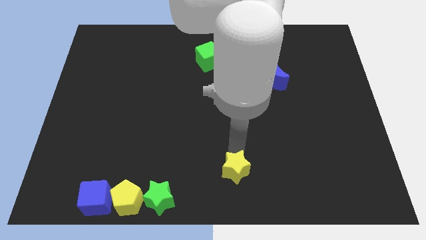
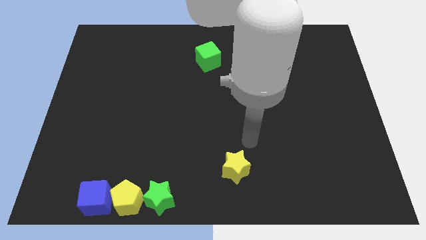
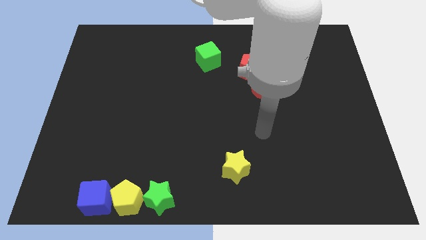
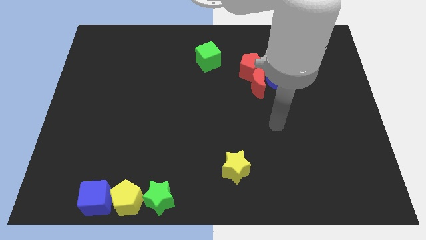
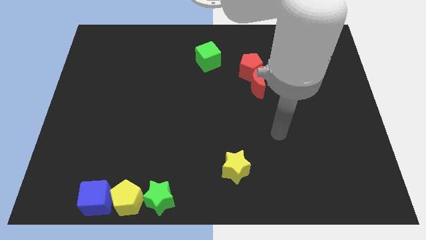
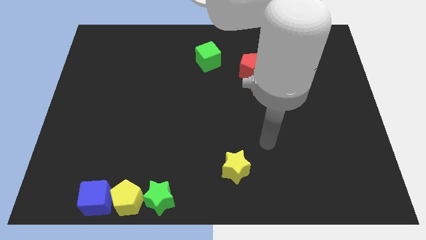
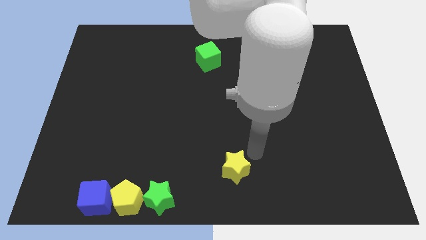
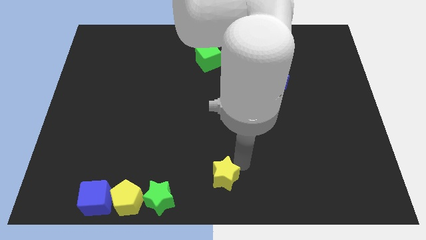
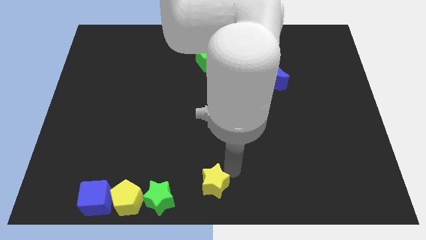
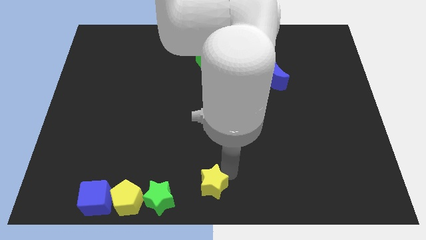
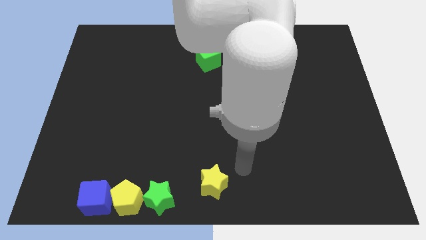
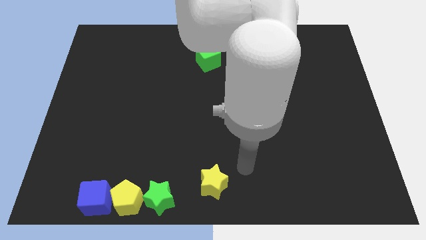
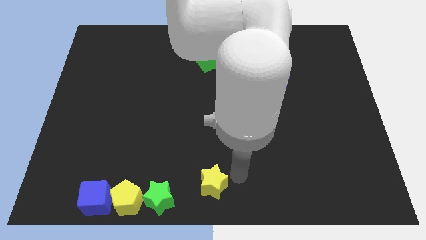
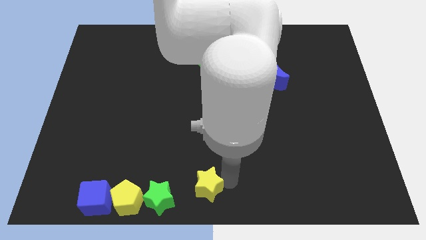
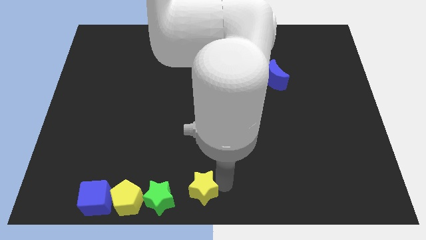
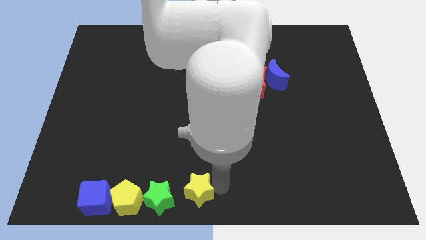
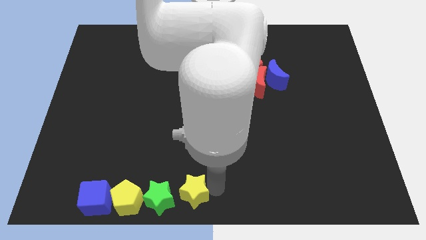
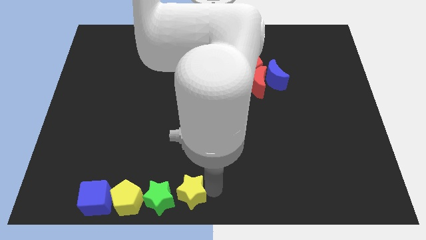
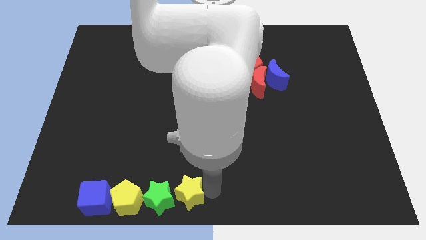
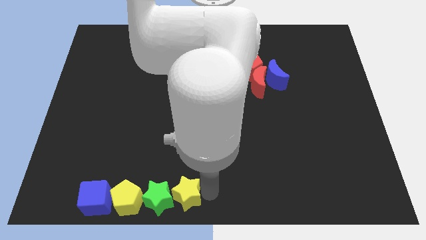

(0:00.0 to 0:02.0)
push the yellow star to the right of the green star

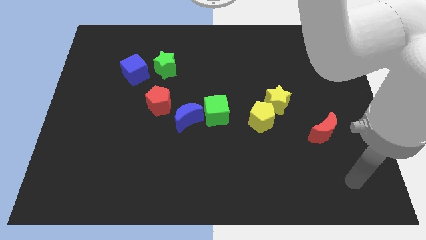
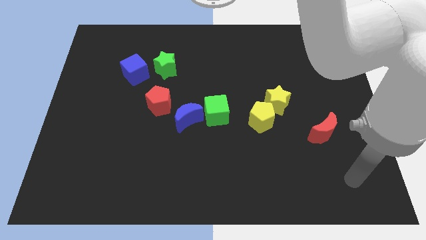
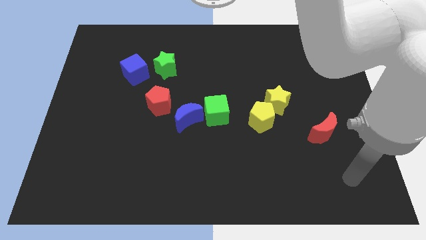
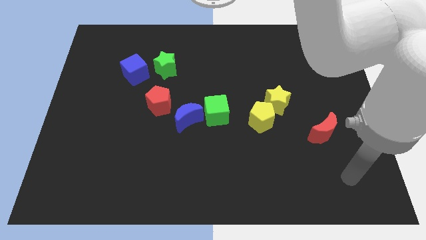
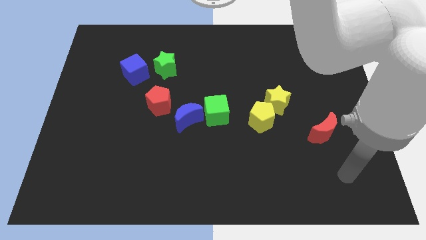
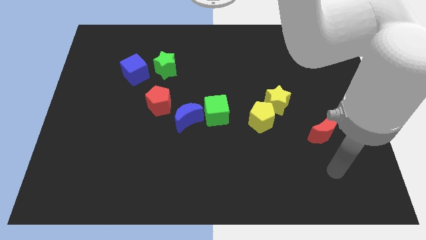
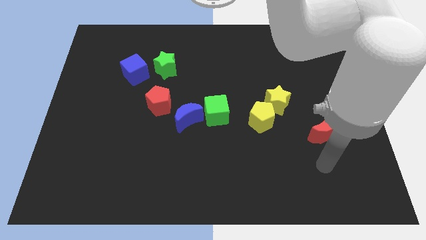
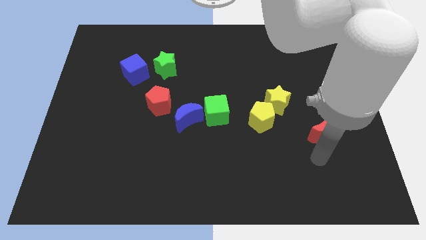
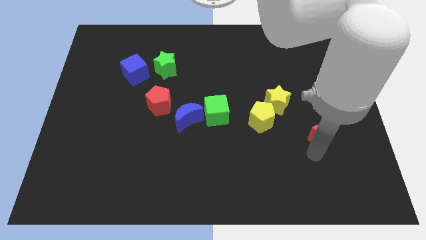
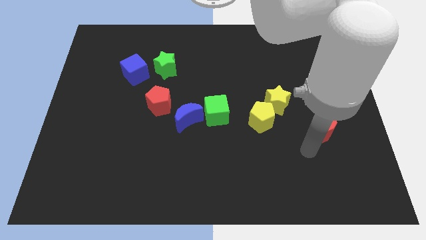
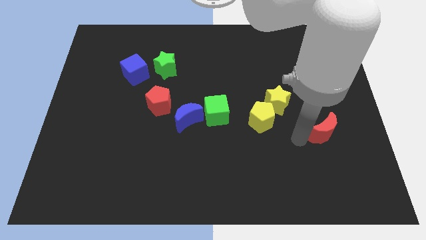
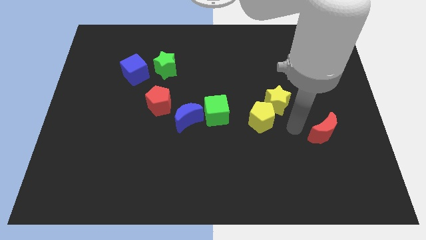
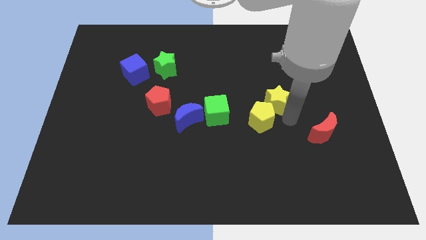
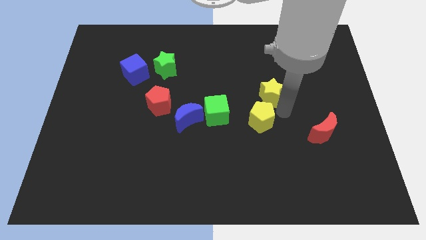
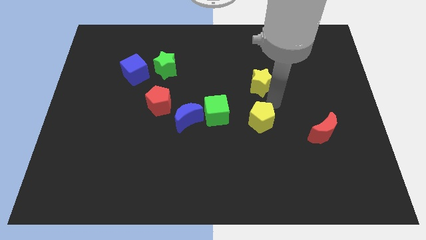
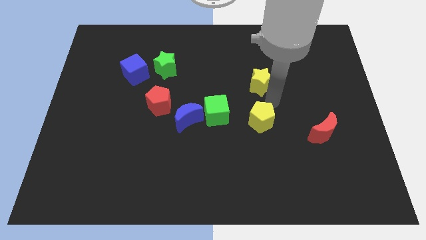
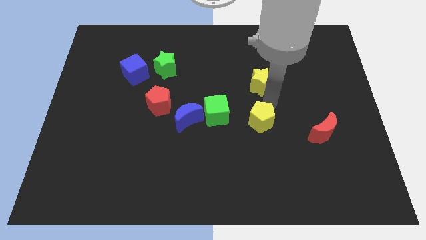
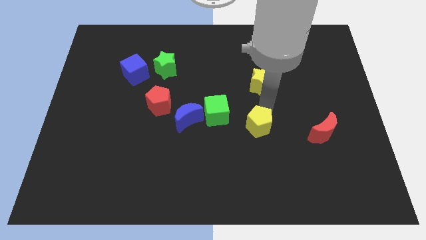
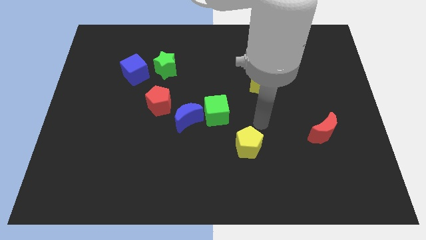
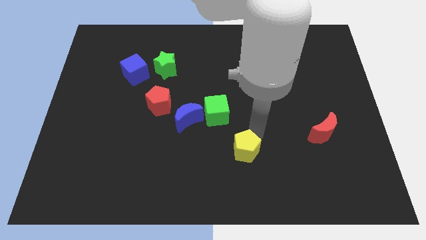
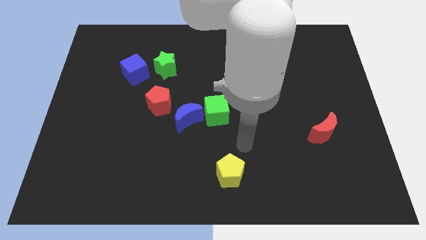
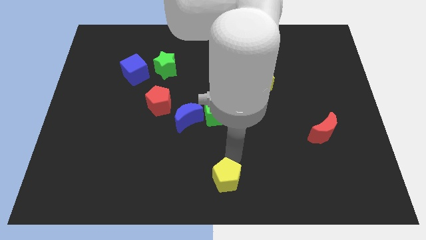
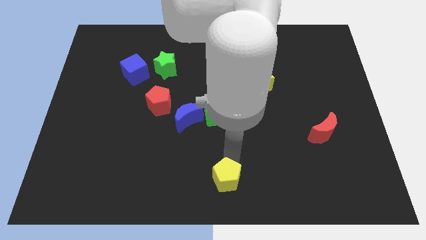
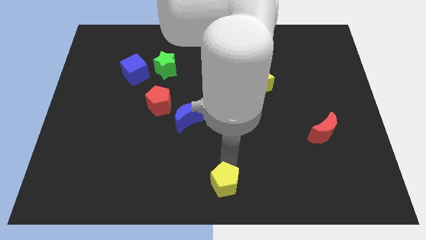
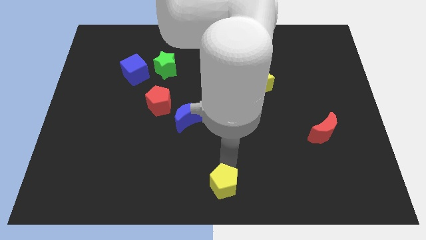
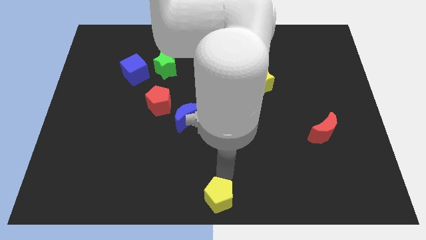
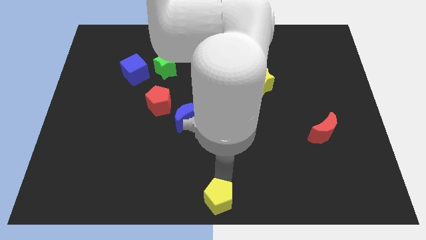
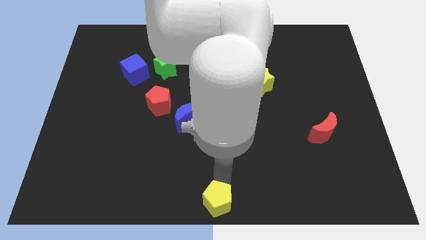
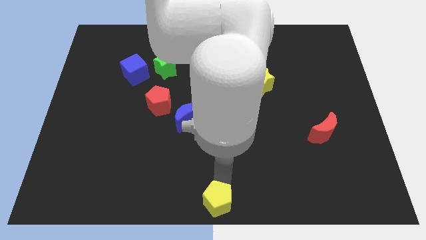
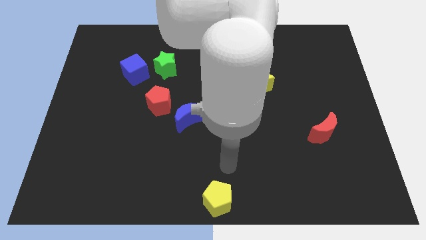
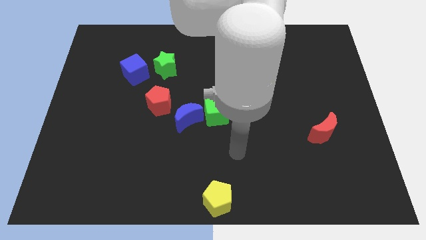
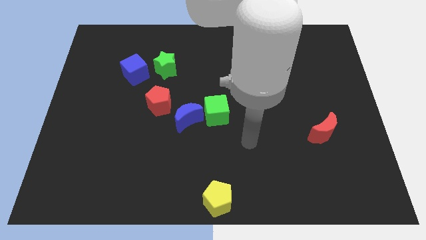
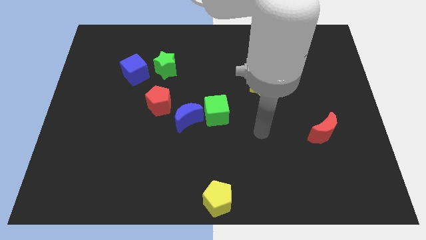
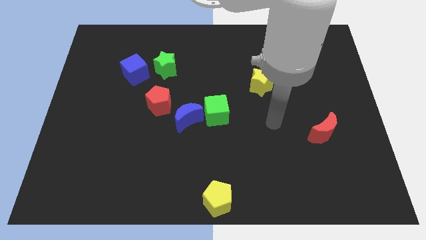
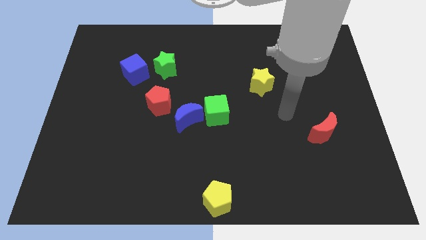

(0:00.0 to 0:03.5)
separate yellow blocks from each other

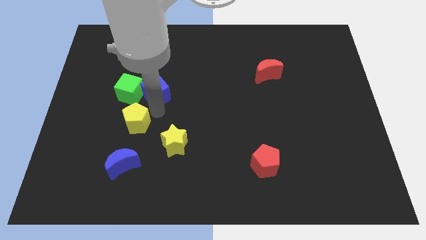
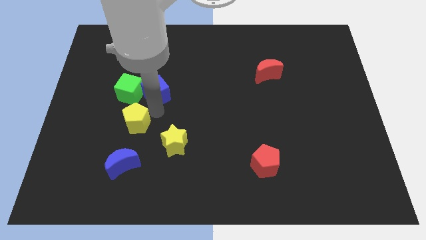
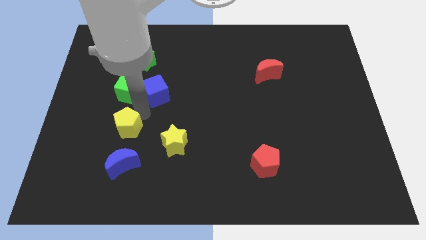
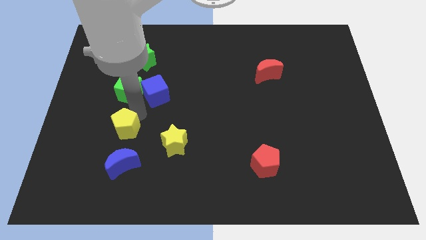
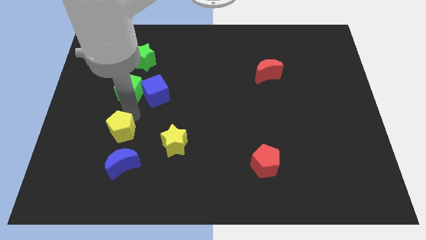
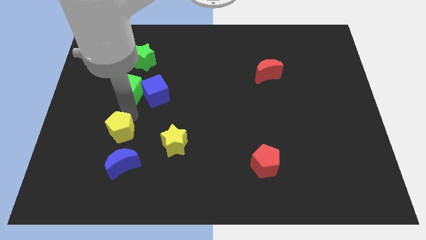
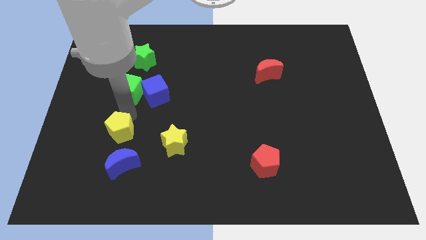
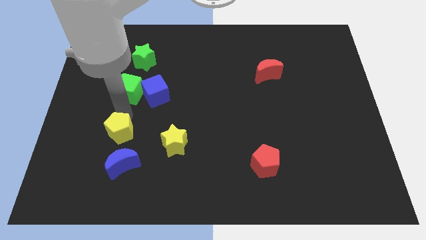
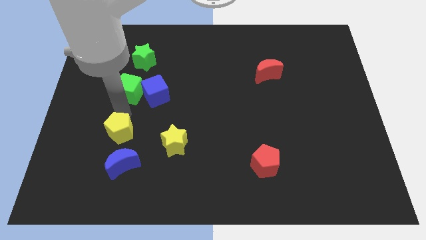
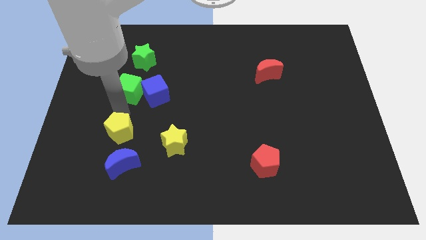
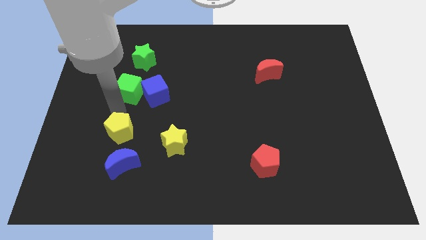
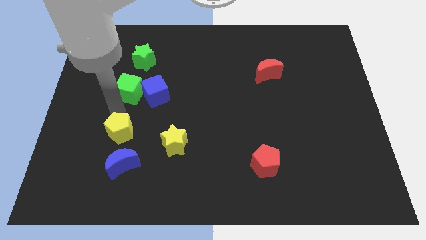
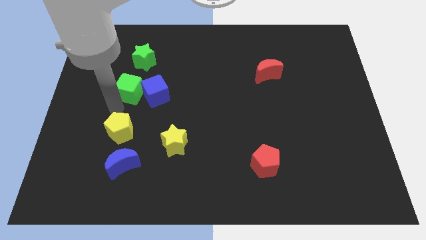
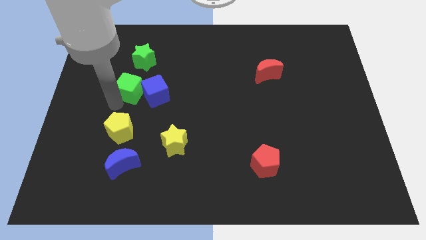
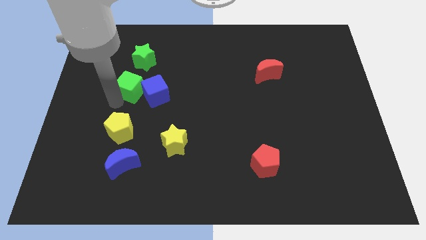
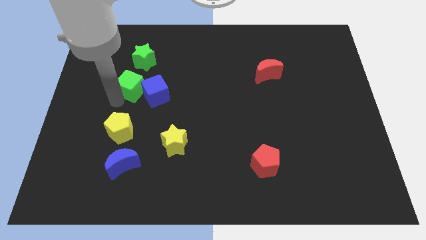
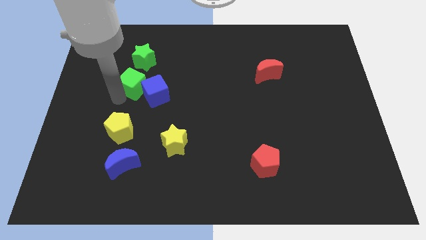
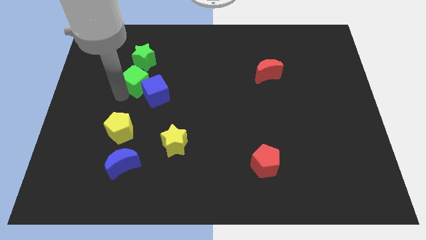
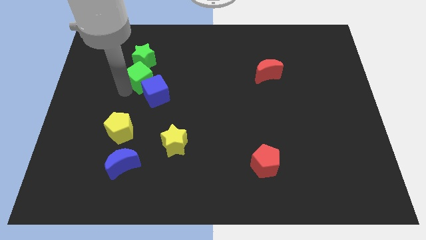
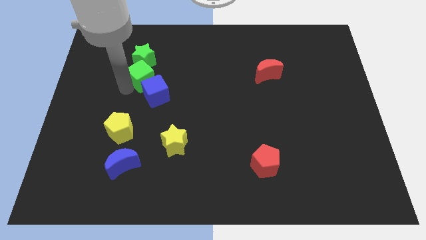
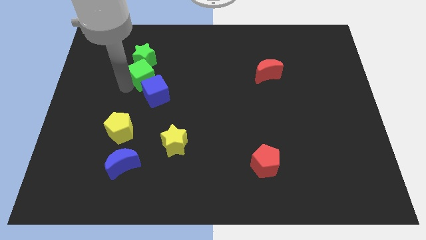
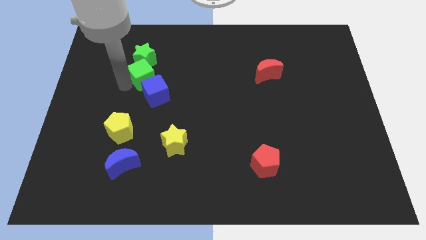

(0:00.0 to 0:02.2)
slide the green cube into the bottom side of the green star

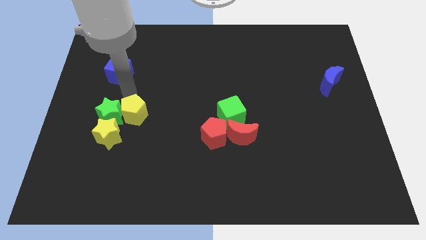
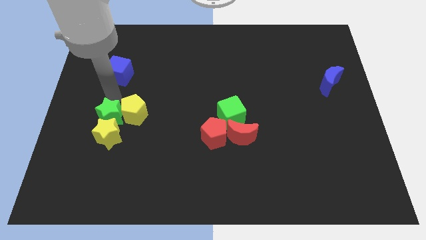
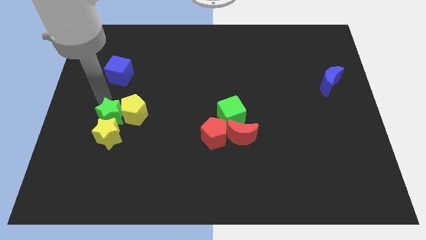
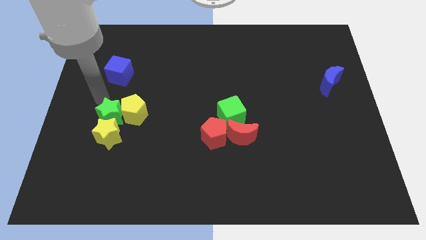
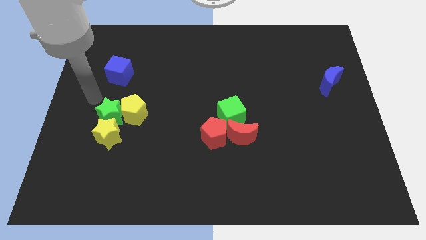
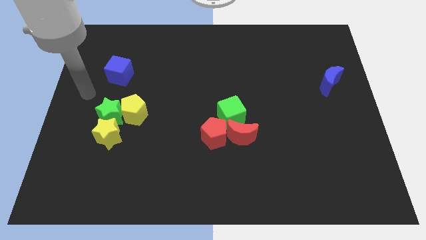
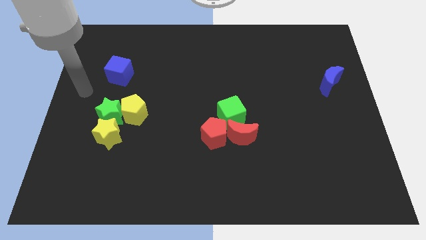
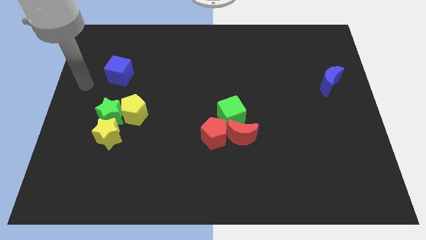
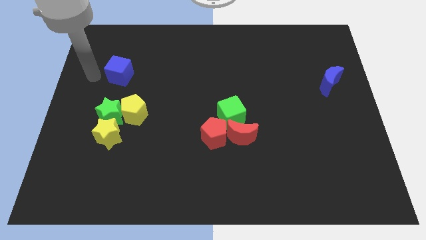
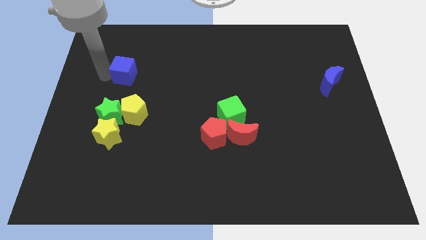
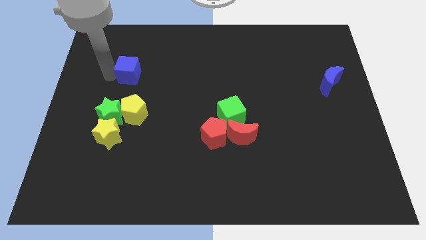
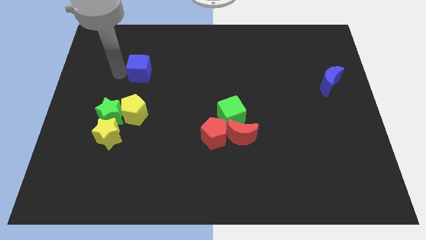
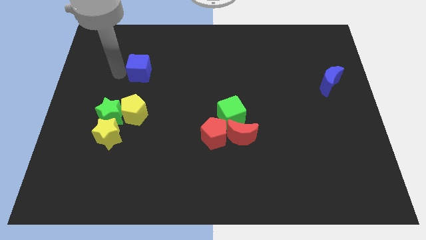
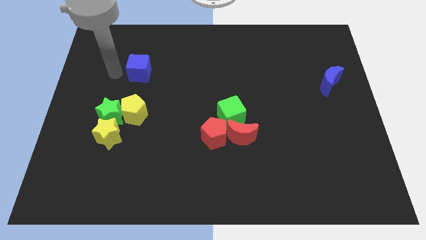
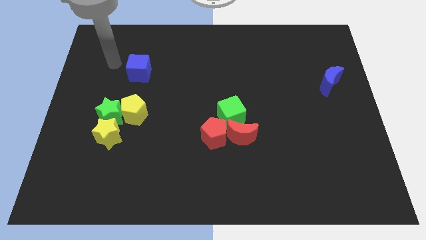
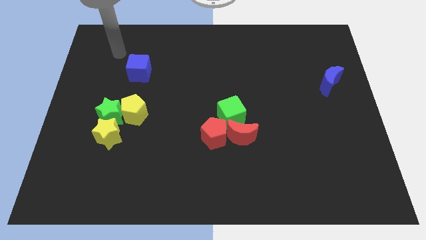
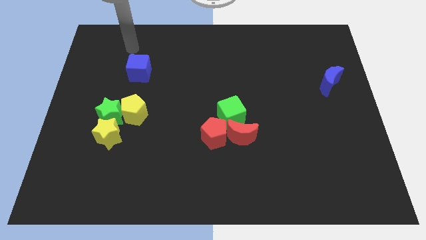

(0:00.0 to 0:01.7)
place the blue cube above the yellow pentagon
